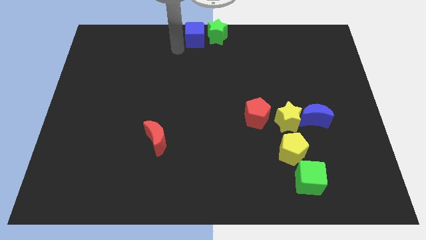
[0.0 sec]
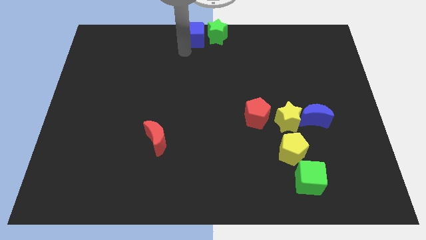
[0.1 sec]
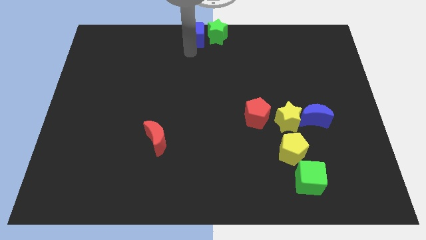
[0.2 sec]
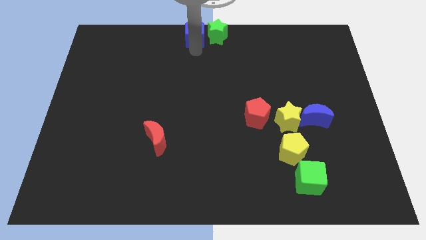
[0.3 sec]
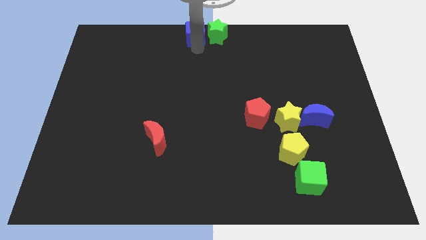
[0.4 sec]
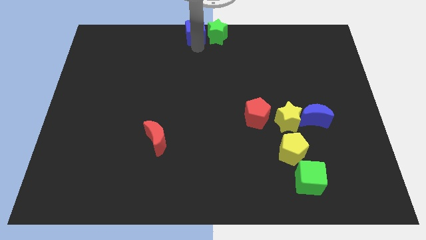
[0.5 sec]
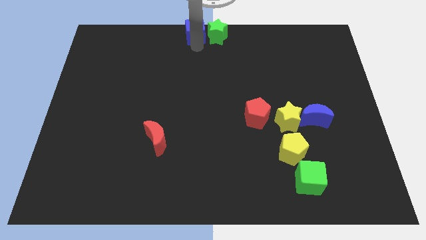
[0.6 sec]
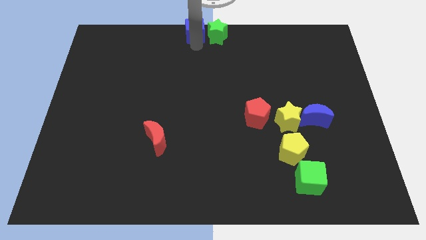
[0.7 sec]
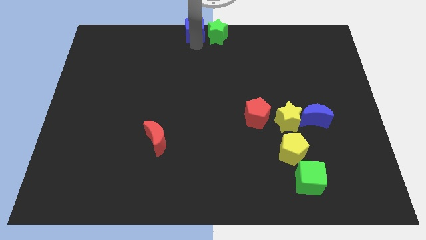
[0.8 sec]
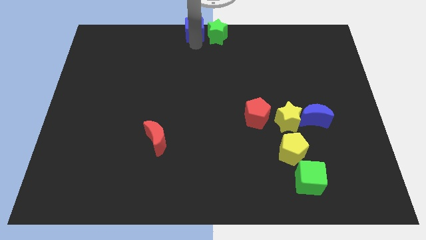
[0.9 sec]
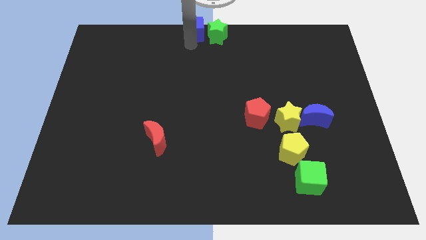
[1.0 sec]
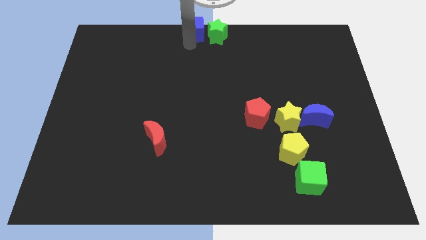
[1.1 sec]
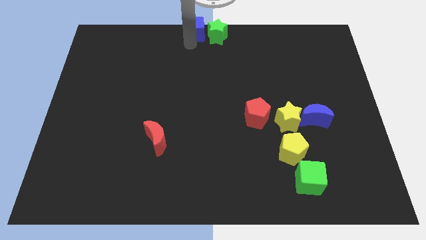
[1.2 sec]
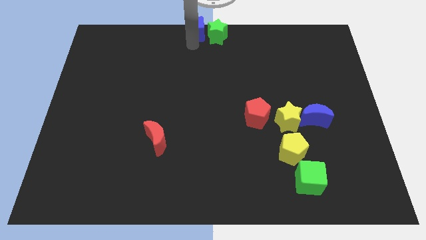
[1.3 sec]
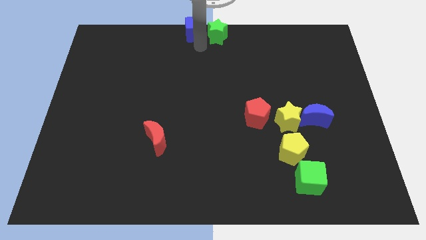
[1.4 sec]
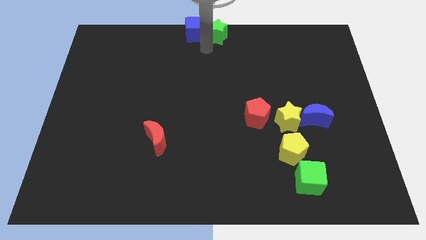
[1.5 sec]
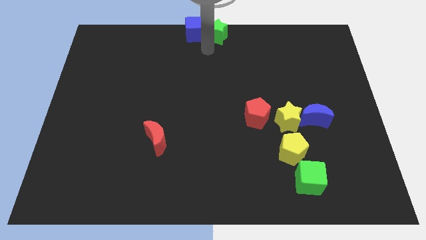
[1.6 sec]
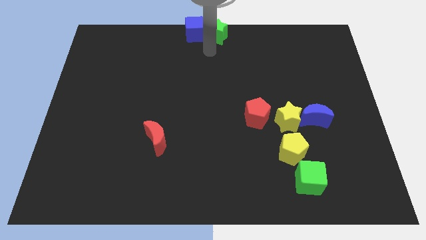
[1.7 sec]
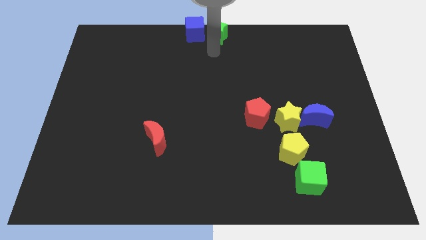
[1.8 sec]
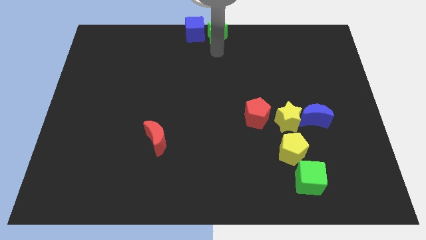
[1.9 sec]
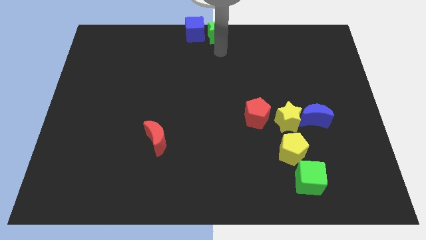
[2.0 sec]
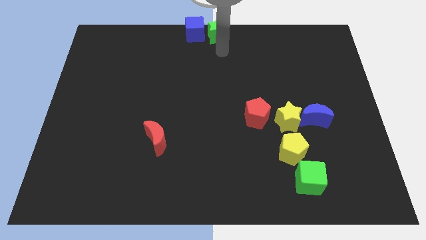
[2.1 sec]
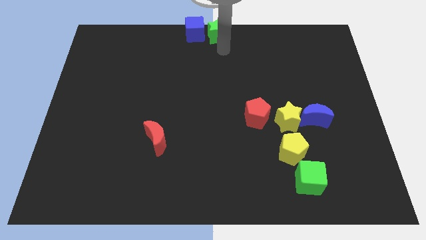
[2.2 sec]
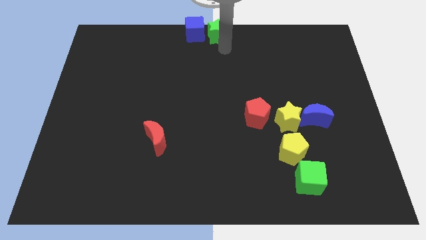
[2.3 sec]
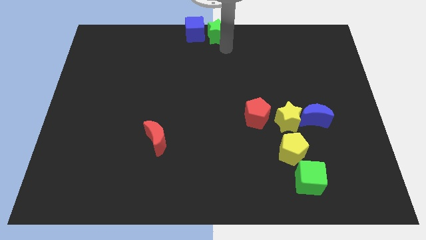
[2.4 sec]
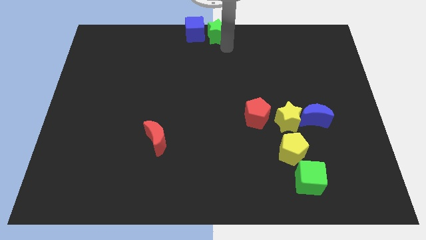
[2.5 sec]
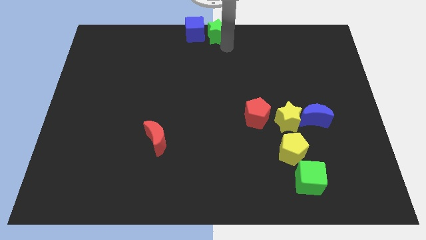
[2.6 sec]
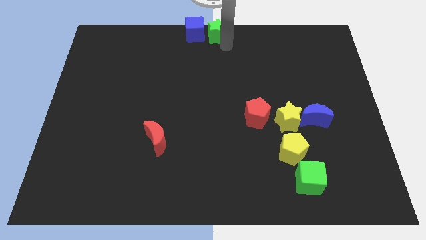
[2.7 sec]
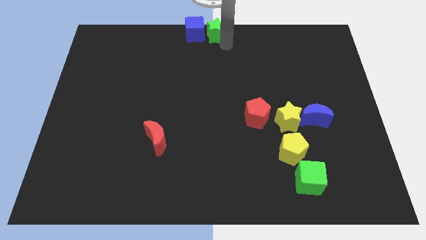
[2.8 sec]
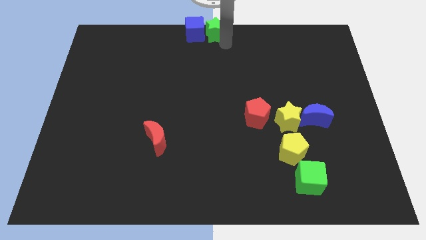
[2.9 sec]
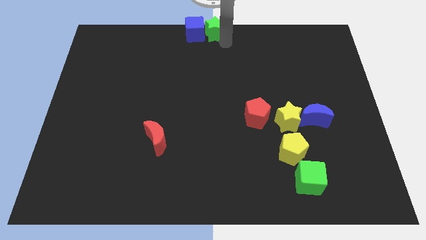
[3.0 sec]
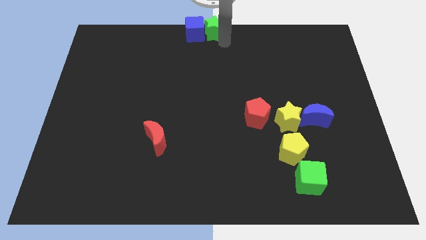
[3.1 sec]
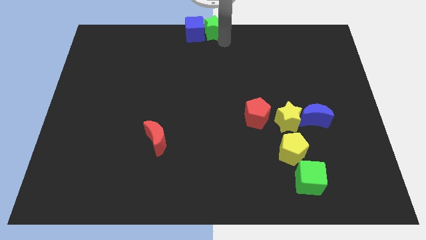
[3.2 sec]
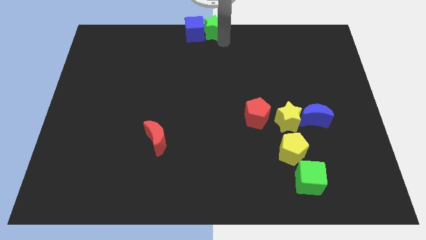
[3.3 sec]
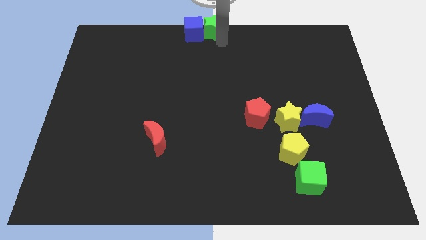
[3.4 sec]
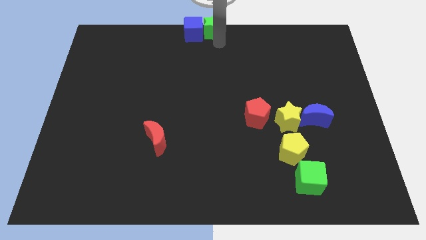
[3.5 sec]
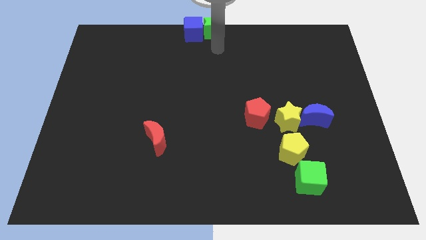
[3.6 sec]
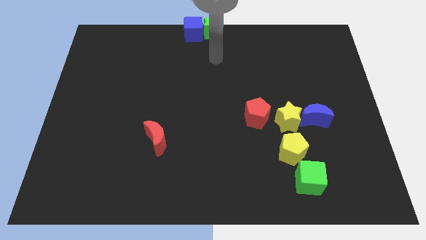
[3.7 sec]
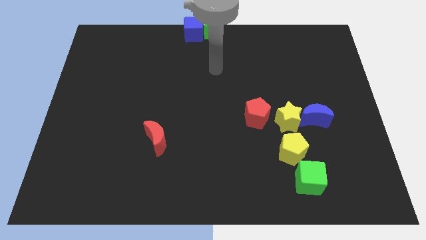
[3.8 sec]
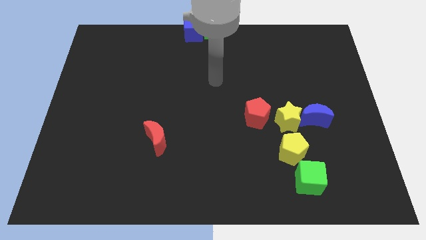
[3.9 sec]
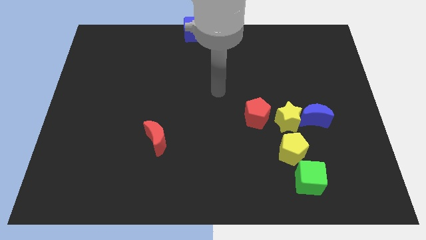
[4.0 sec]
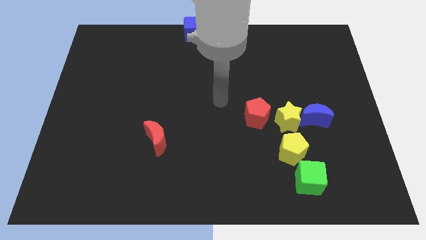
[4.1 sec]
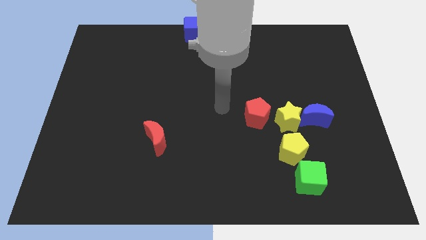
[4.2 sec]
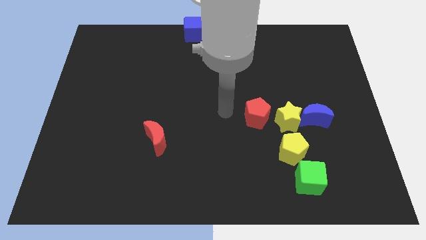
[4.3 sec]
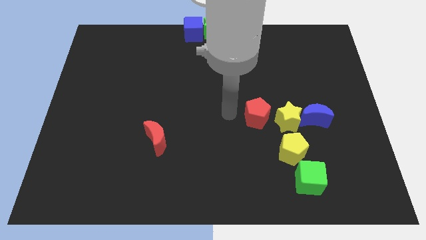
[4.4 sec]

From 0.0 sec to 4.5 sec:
place green star and blue block at the top center

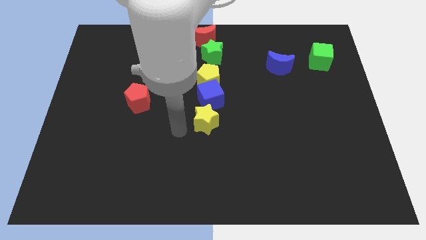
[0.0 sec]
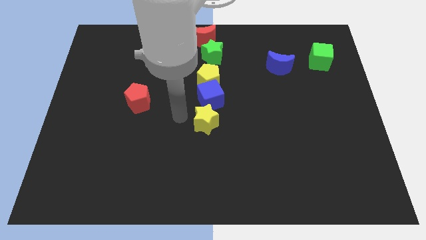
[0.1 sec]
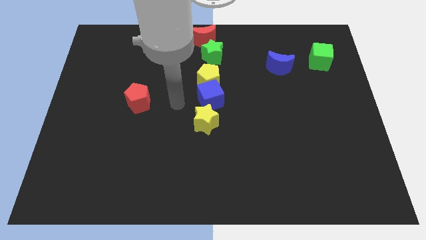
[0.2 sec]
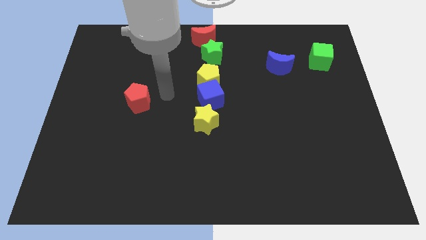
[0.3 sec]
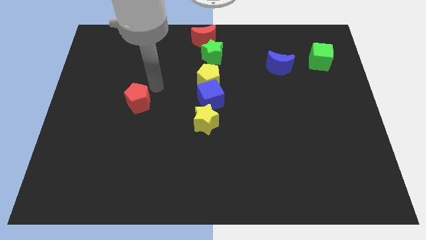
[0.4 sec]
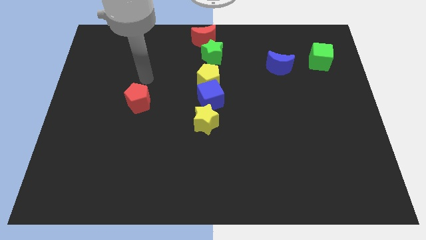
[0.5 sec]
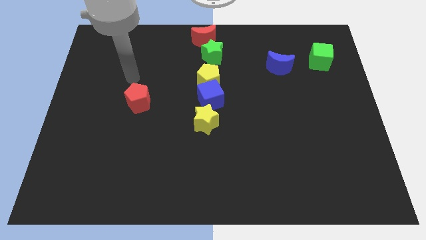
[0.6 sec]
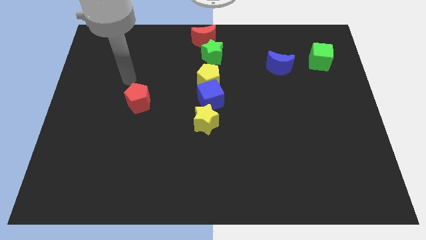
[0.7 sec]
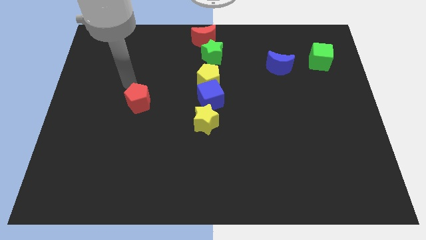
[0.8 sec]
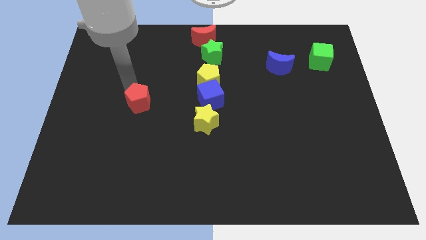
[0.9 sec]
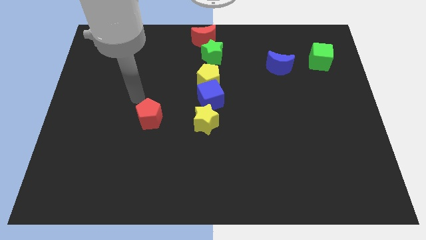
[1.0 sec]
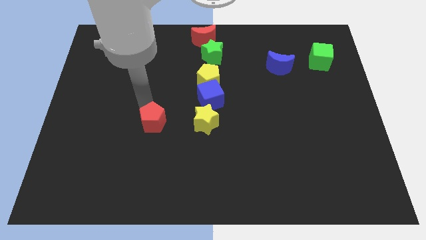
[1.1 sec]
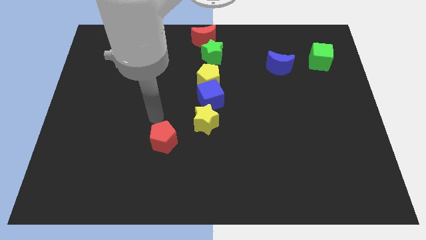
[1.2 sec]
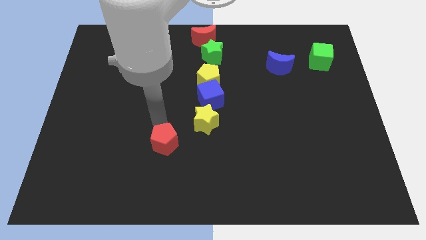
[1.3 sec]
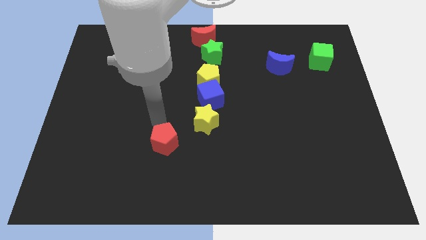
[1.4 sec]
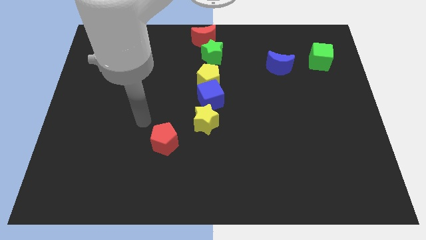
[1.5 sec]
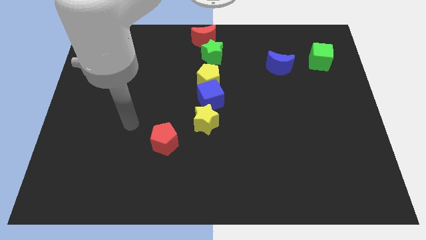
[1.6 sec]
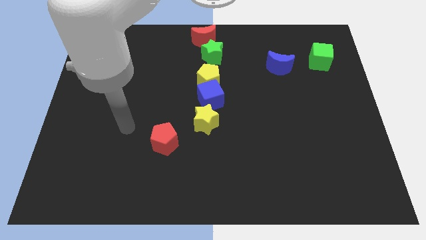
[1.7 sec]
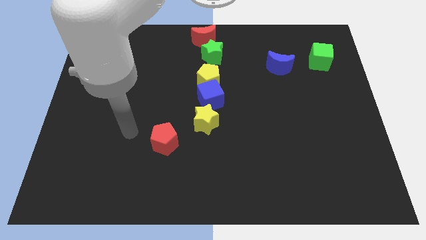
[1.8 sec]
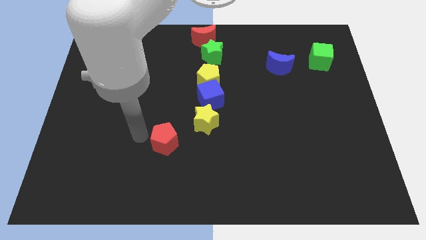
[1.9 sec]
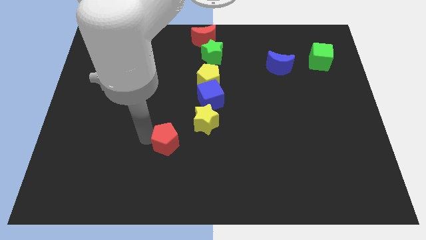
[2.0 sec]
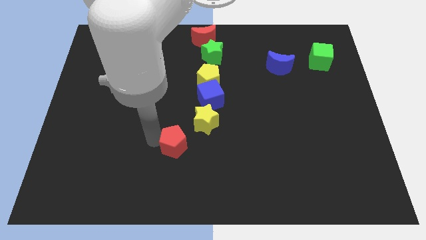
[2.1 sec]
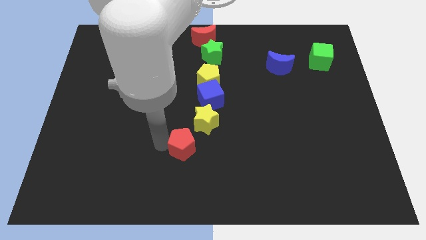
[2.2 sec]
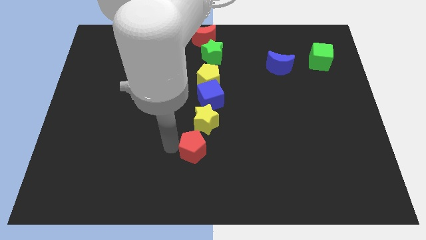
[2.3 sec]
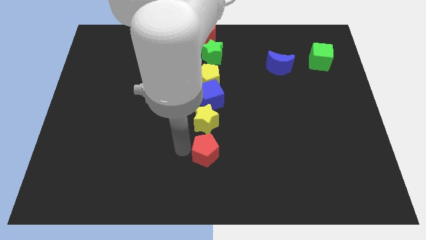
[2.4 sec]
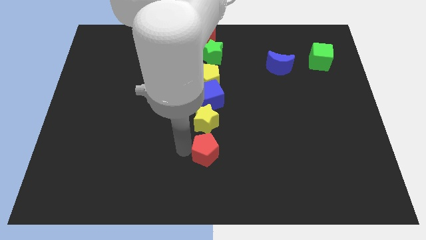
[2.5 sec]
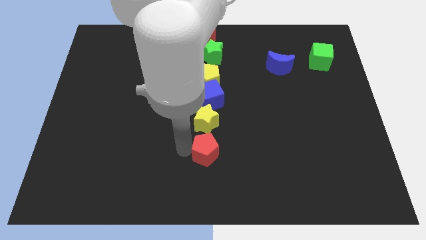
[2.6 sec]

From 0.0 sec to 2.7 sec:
place red pentagon to the bottom of yellow star

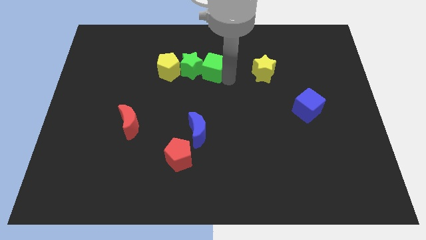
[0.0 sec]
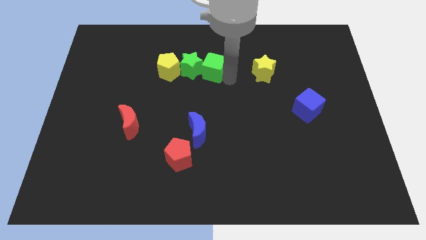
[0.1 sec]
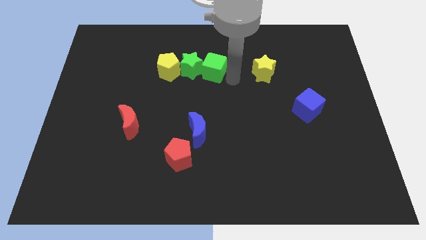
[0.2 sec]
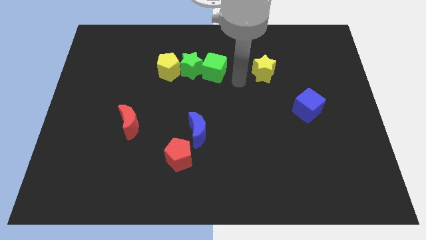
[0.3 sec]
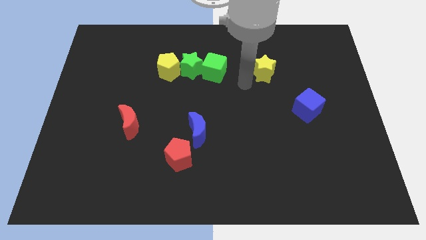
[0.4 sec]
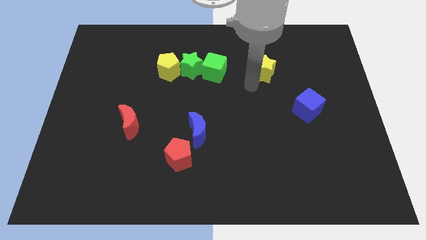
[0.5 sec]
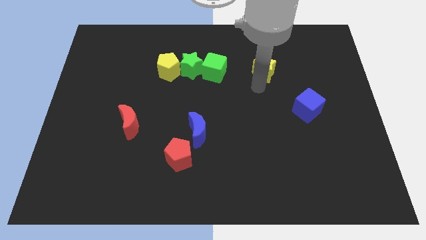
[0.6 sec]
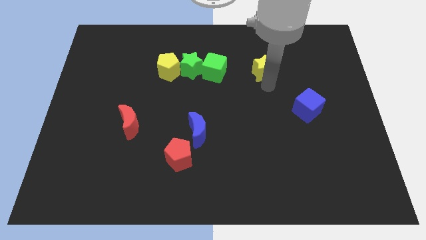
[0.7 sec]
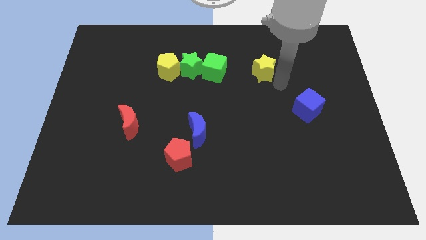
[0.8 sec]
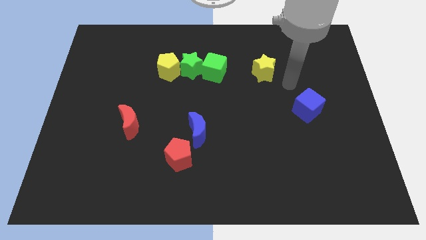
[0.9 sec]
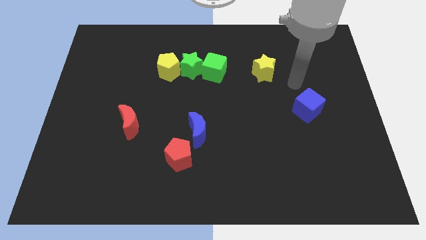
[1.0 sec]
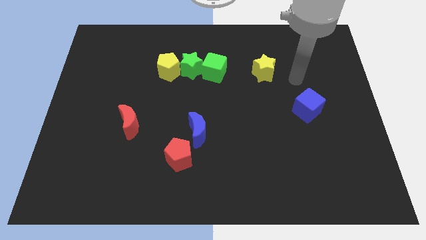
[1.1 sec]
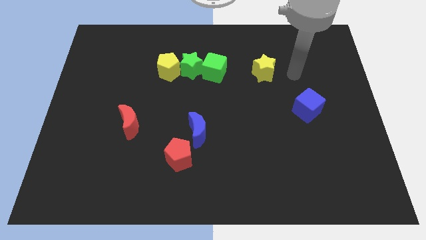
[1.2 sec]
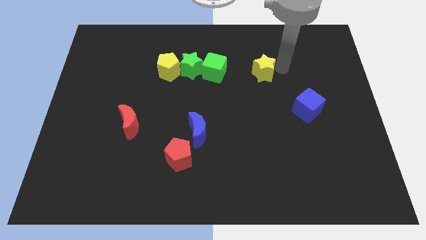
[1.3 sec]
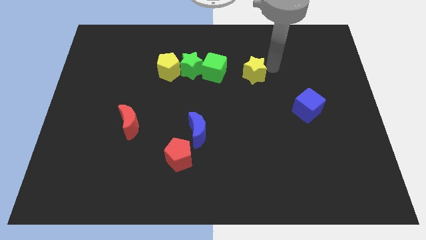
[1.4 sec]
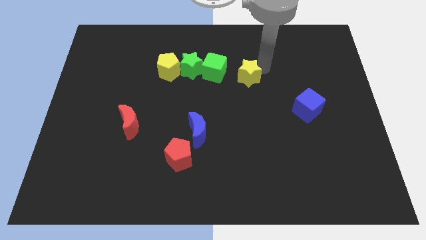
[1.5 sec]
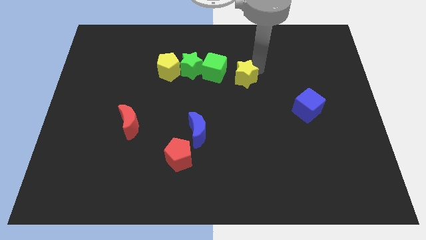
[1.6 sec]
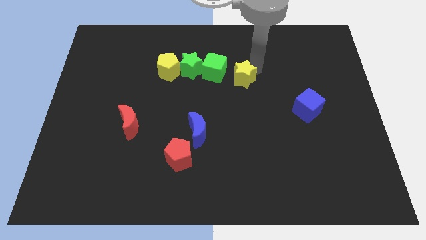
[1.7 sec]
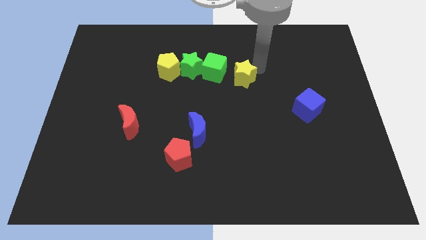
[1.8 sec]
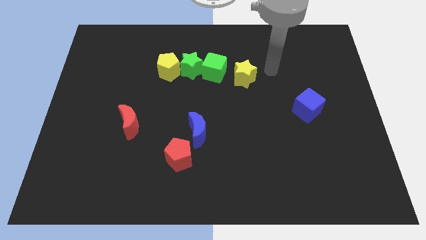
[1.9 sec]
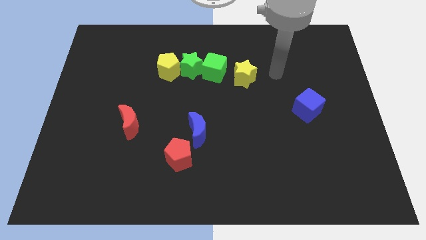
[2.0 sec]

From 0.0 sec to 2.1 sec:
move the yellow star close to the green cube
